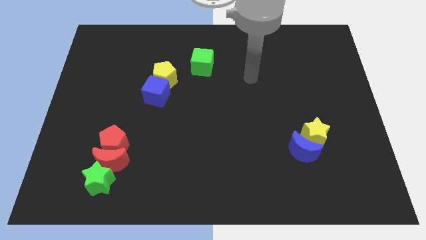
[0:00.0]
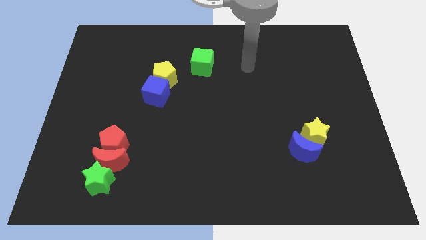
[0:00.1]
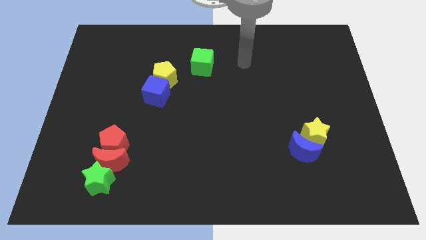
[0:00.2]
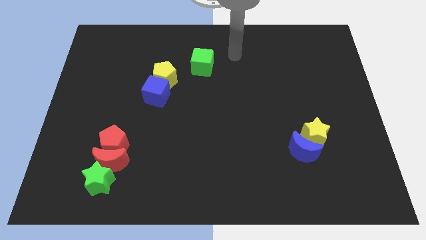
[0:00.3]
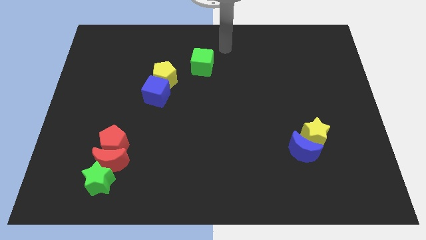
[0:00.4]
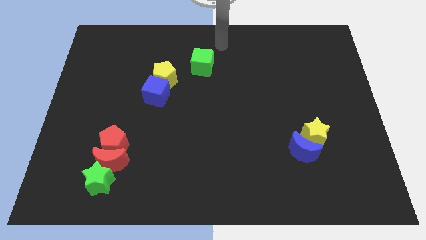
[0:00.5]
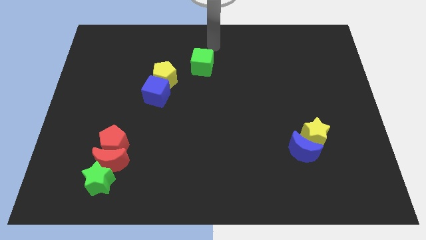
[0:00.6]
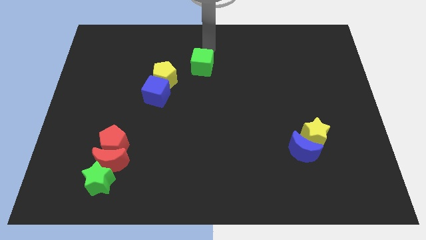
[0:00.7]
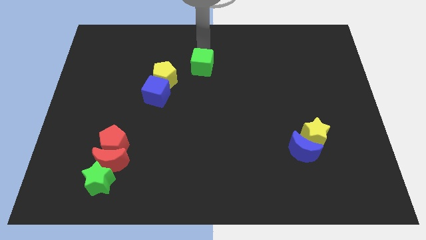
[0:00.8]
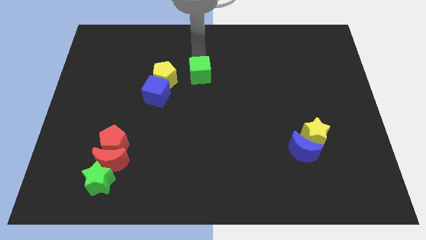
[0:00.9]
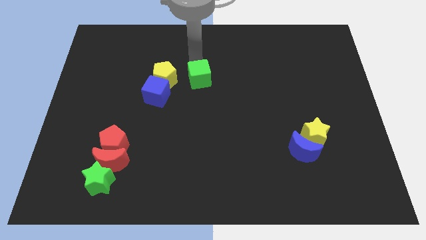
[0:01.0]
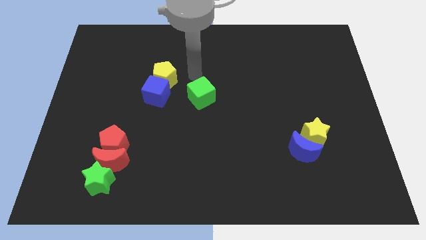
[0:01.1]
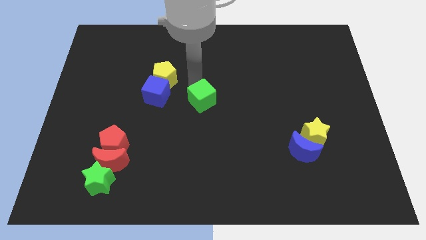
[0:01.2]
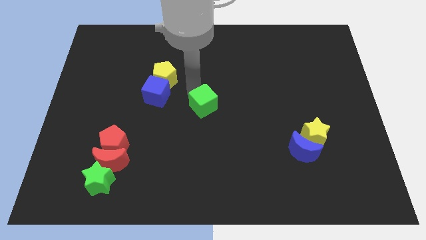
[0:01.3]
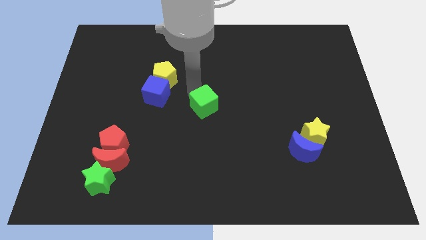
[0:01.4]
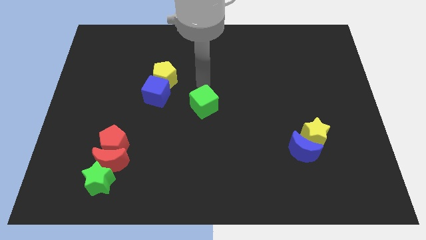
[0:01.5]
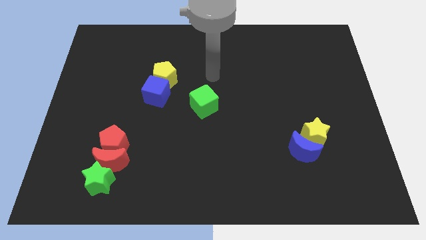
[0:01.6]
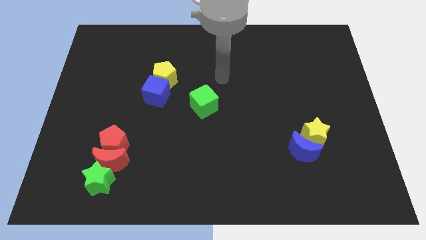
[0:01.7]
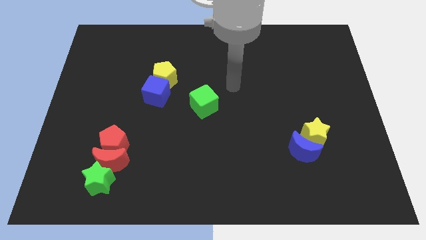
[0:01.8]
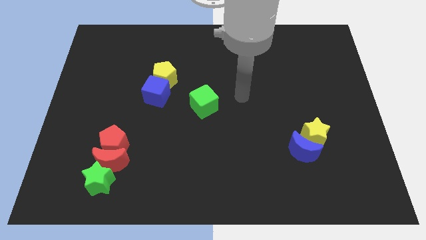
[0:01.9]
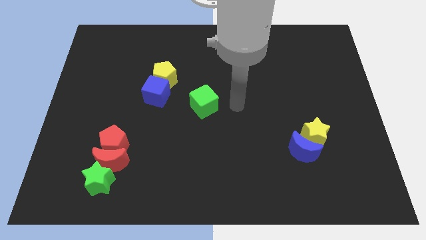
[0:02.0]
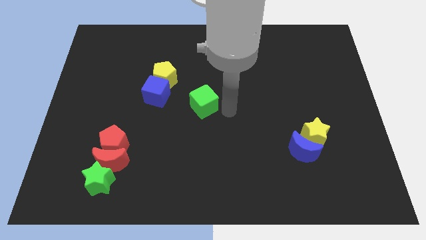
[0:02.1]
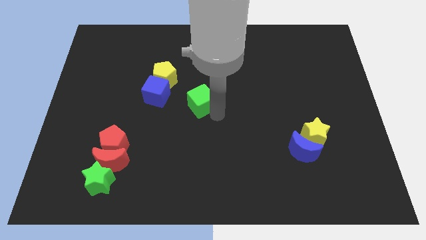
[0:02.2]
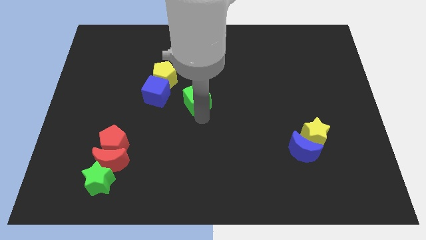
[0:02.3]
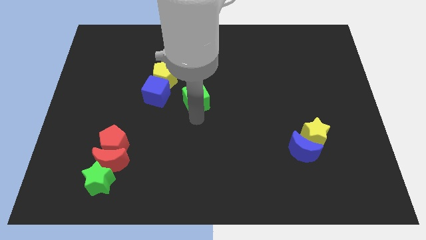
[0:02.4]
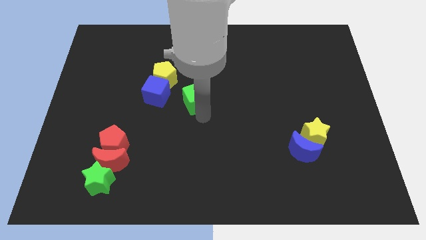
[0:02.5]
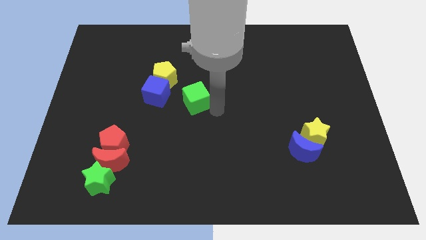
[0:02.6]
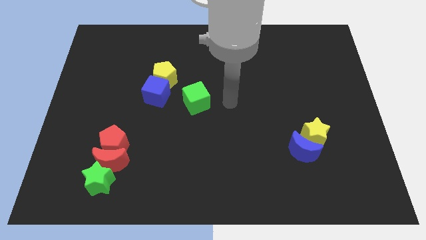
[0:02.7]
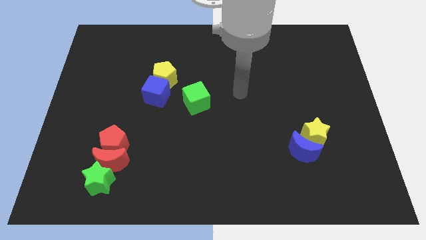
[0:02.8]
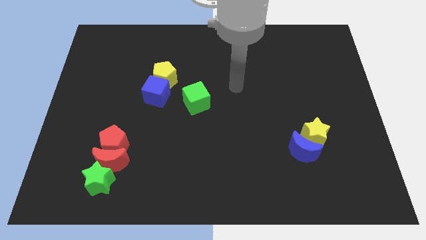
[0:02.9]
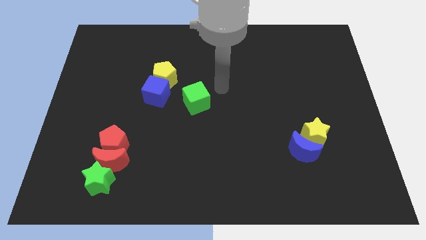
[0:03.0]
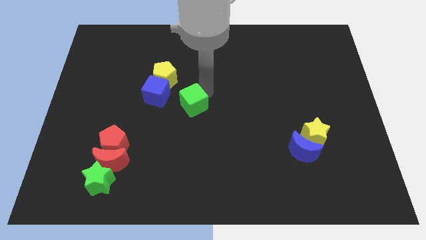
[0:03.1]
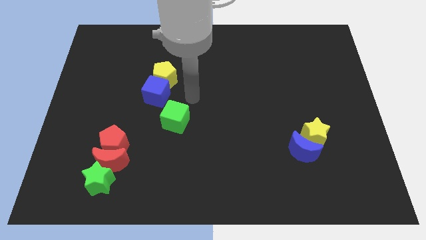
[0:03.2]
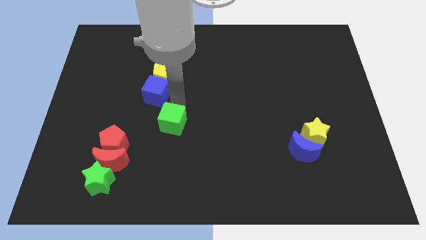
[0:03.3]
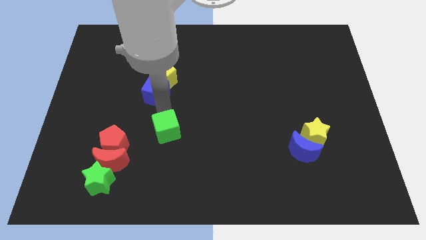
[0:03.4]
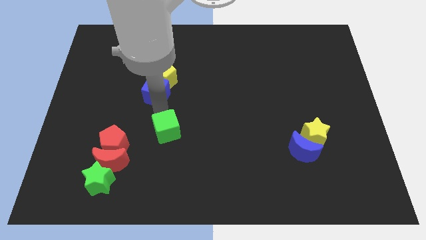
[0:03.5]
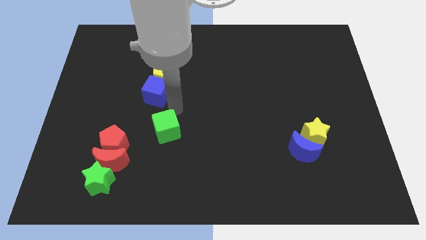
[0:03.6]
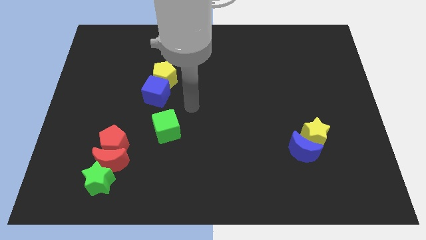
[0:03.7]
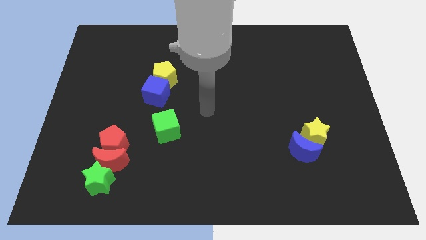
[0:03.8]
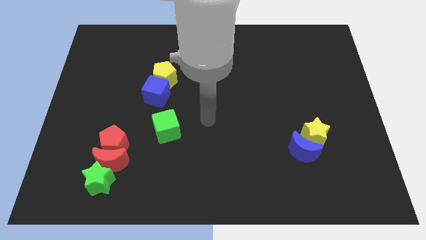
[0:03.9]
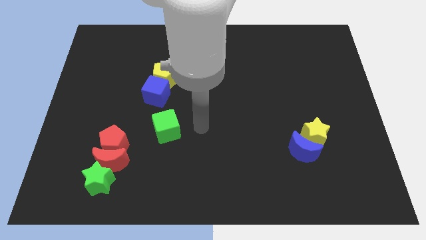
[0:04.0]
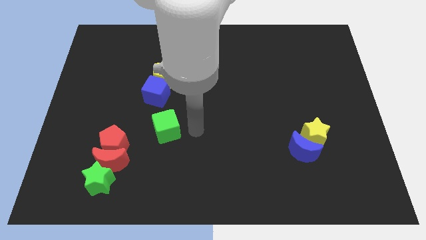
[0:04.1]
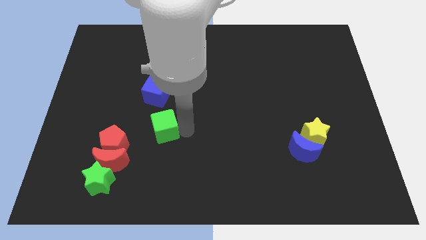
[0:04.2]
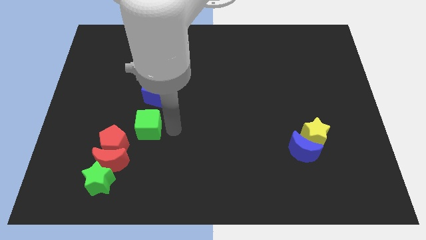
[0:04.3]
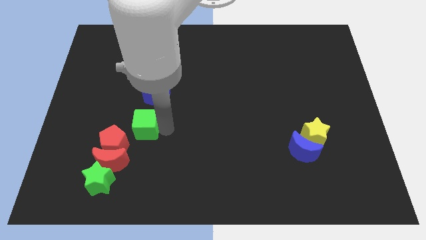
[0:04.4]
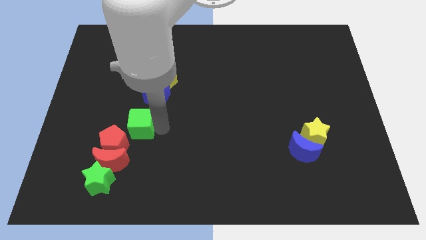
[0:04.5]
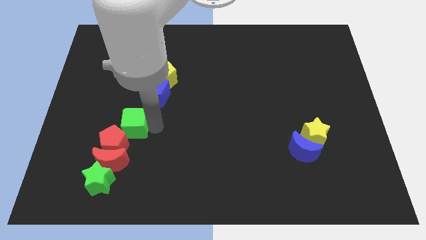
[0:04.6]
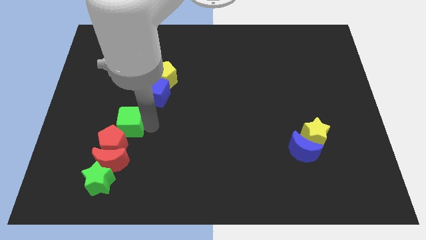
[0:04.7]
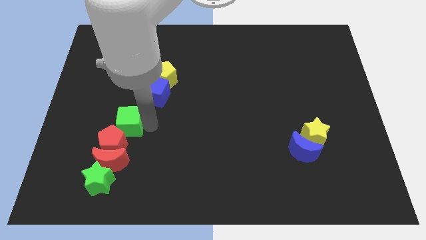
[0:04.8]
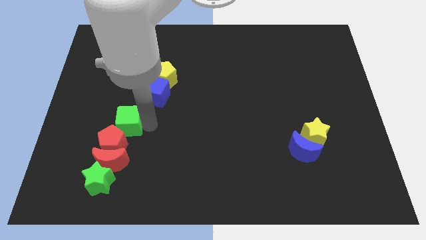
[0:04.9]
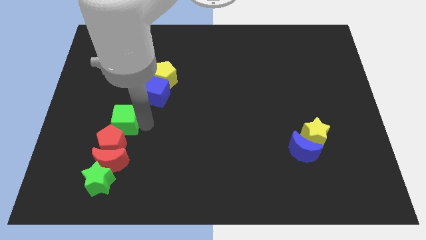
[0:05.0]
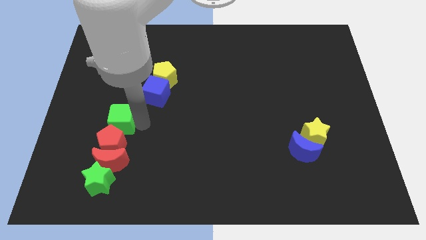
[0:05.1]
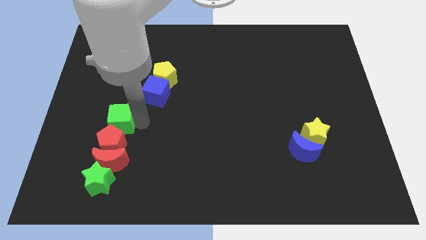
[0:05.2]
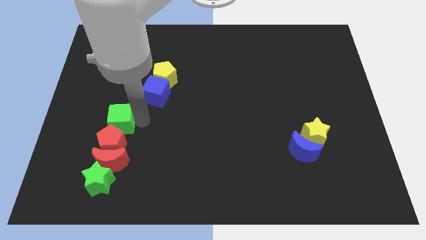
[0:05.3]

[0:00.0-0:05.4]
push the green cube to the bottom left corner of blue cube

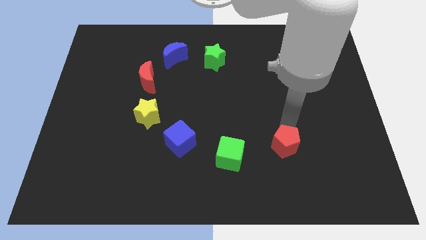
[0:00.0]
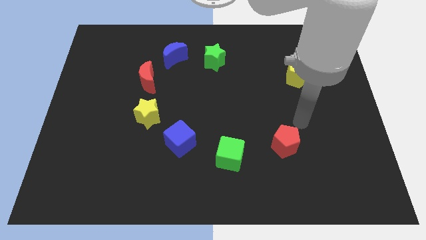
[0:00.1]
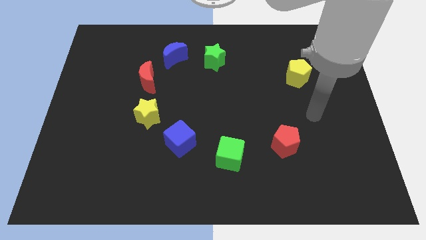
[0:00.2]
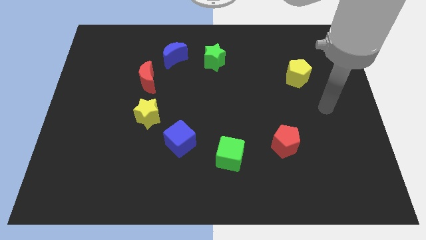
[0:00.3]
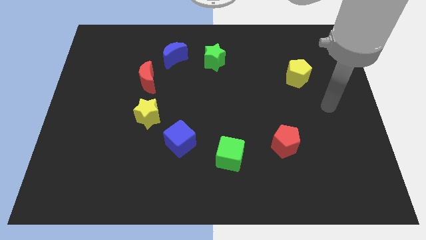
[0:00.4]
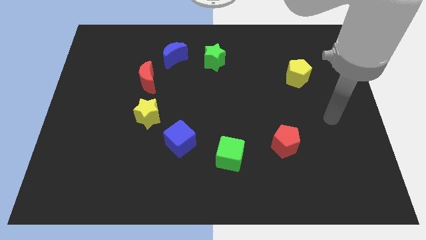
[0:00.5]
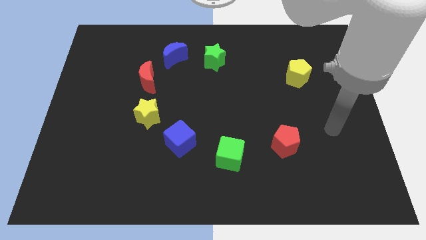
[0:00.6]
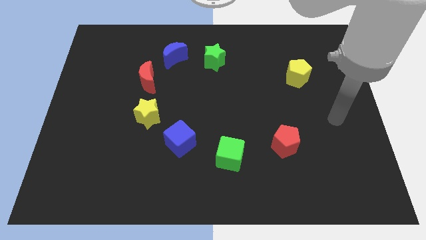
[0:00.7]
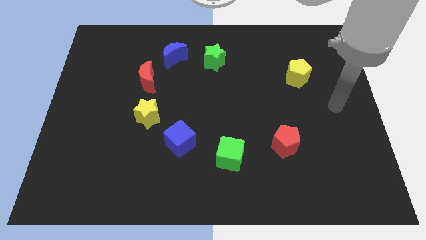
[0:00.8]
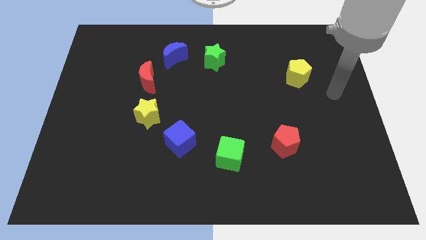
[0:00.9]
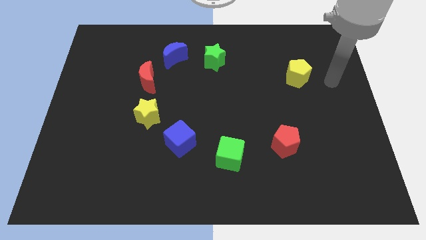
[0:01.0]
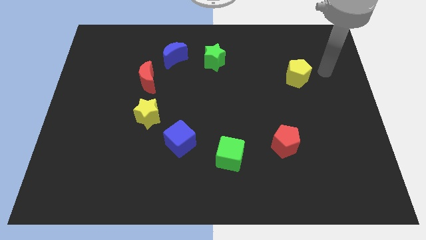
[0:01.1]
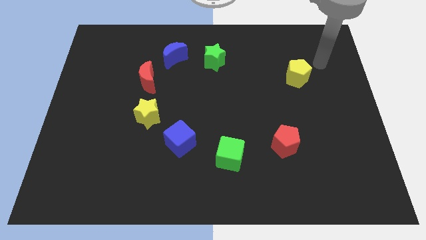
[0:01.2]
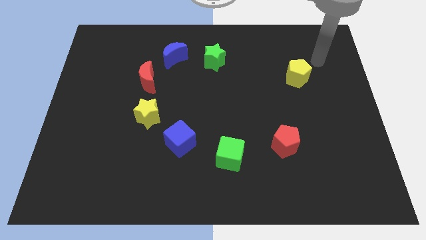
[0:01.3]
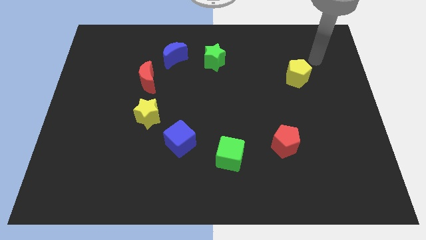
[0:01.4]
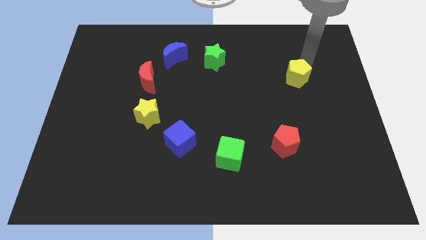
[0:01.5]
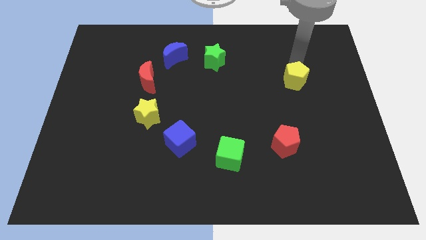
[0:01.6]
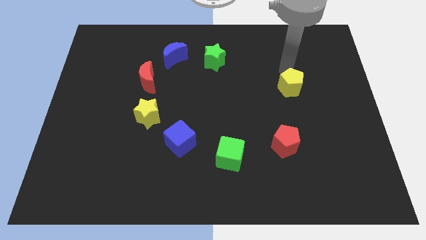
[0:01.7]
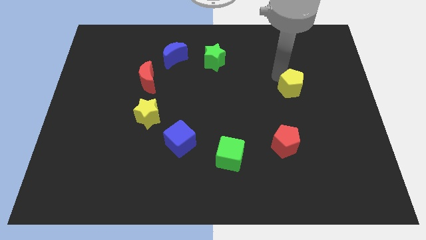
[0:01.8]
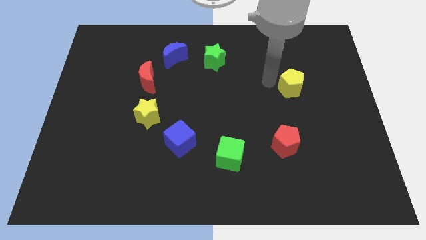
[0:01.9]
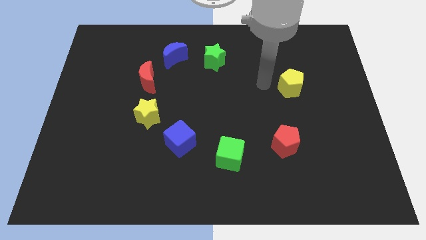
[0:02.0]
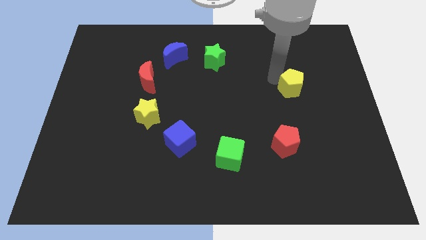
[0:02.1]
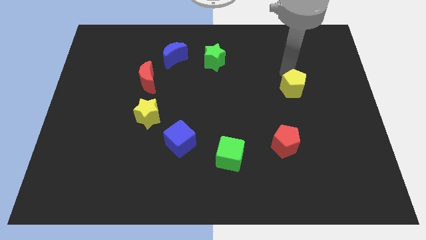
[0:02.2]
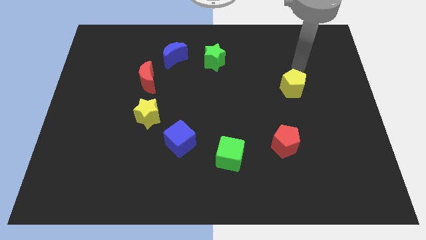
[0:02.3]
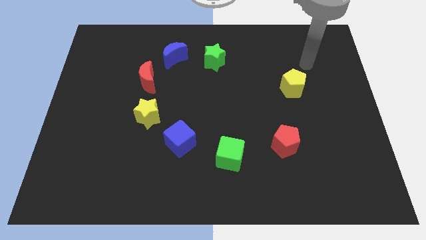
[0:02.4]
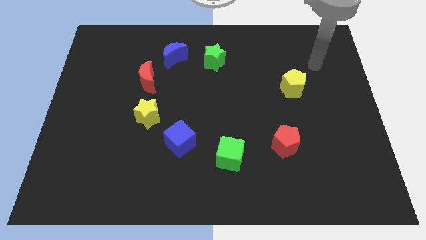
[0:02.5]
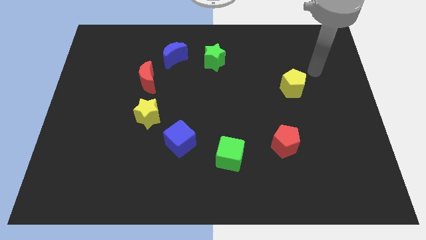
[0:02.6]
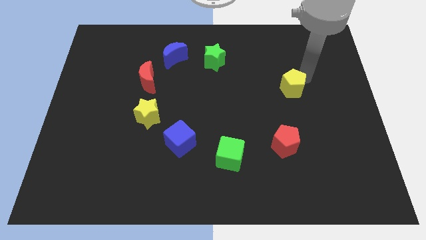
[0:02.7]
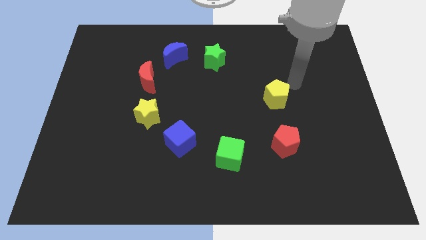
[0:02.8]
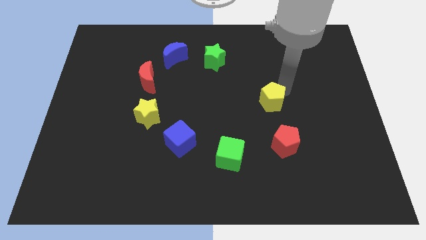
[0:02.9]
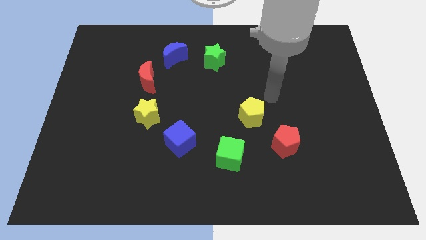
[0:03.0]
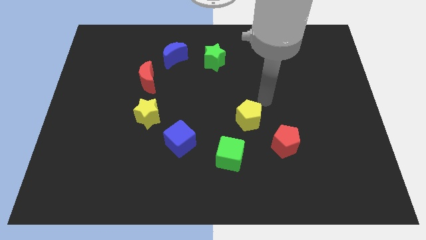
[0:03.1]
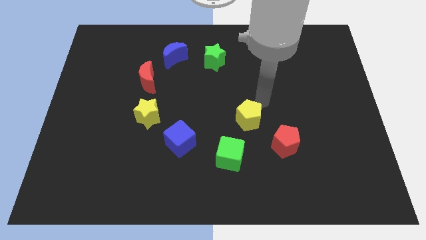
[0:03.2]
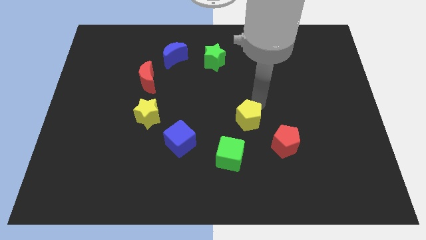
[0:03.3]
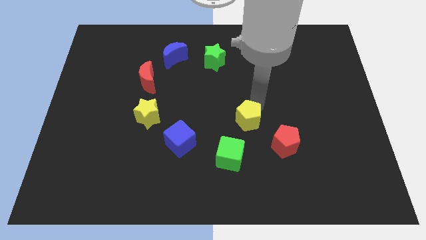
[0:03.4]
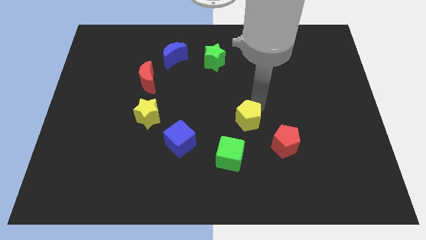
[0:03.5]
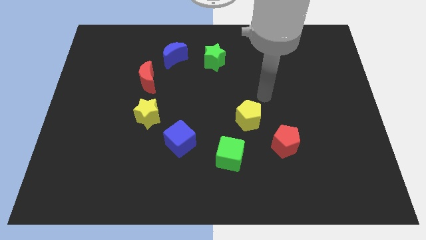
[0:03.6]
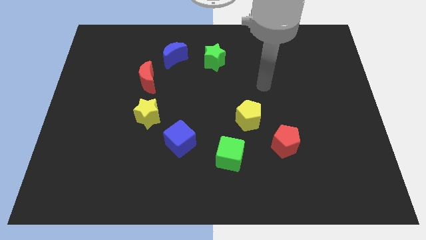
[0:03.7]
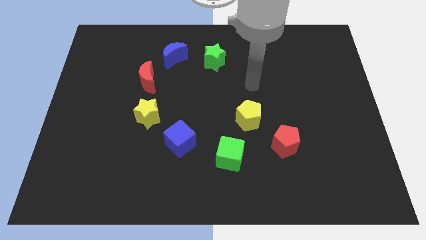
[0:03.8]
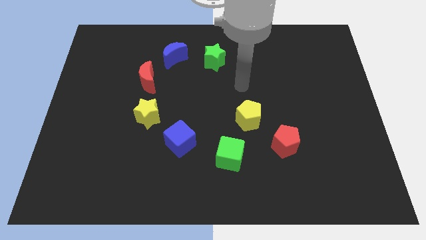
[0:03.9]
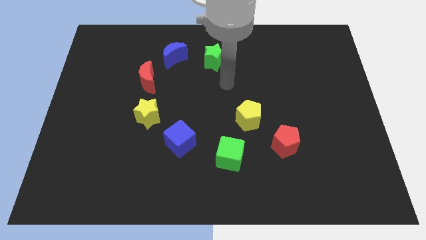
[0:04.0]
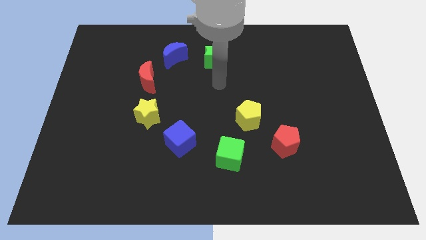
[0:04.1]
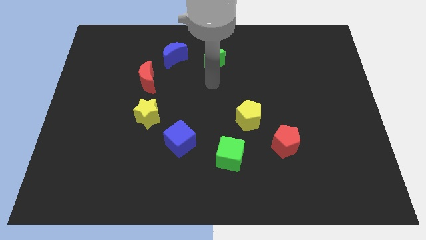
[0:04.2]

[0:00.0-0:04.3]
push the yellow pentagon to the bottom center
